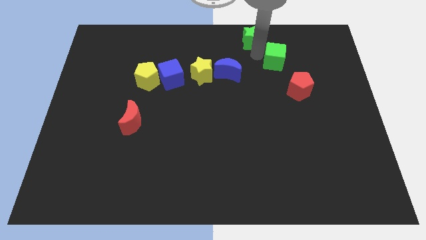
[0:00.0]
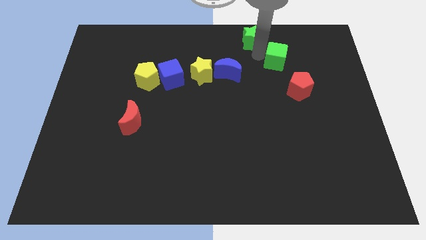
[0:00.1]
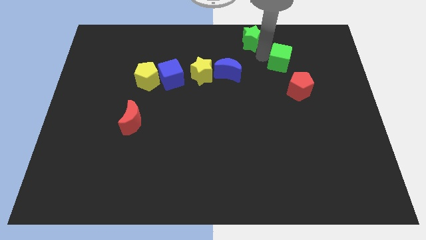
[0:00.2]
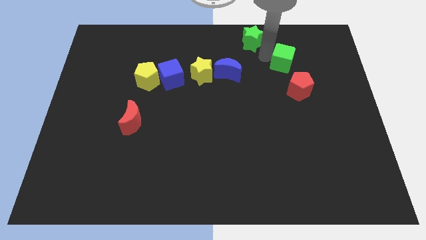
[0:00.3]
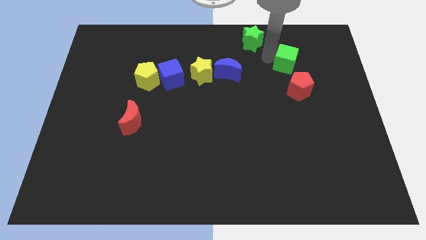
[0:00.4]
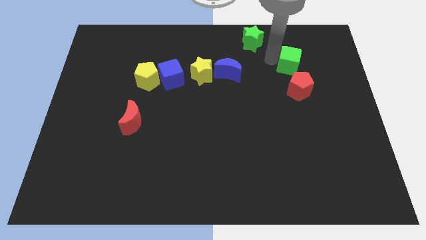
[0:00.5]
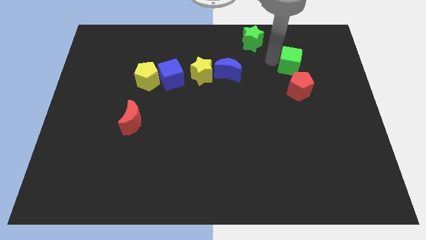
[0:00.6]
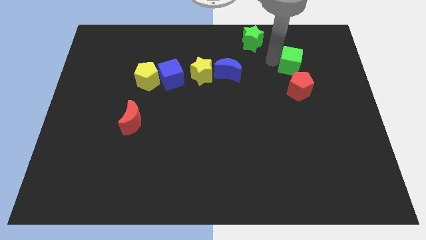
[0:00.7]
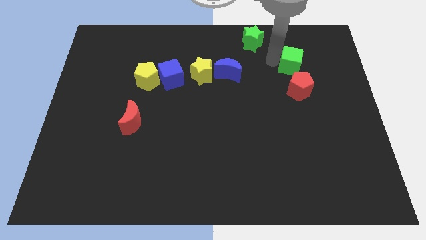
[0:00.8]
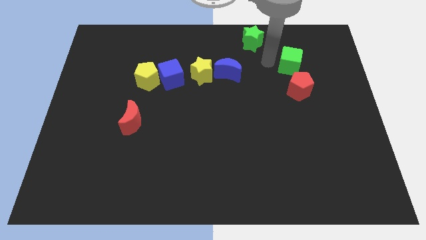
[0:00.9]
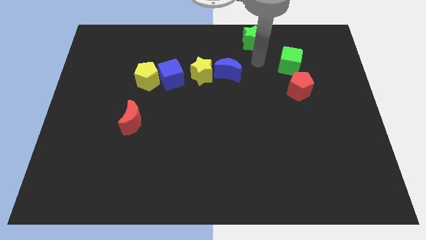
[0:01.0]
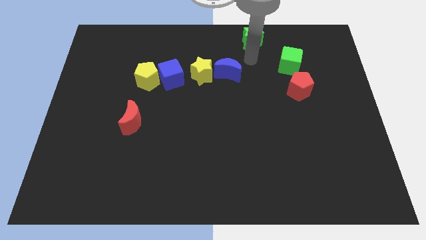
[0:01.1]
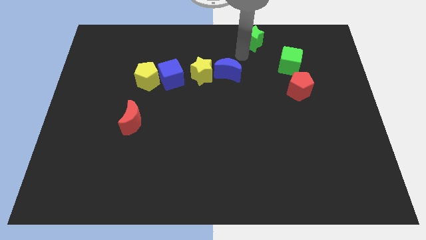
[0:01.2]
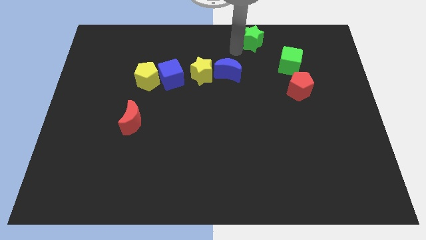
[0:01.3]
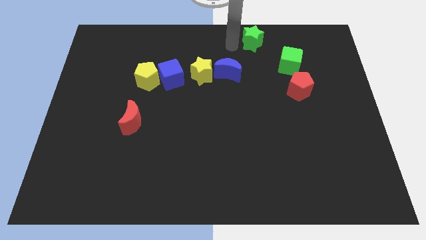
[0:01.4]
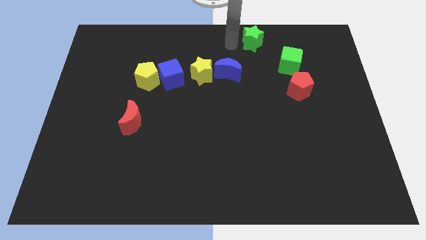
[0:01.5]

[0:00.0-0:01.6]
move the green cube diagonally above red pentagon

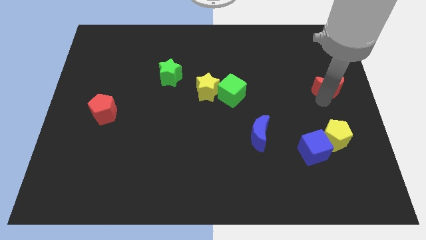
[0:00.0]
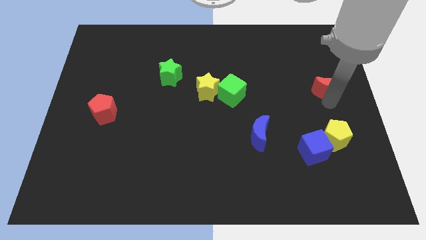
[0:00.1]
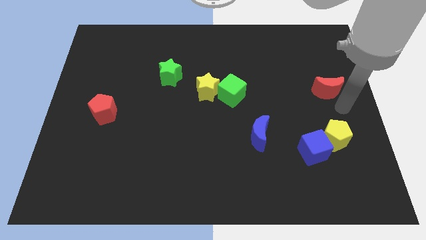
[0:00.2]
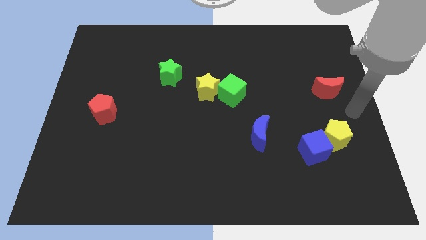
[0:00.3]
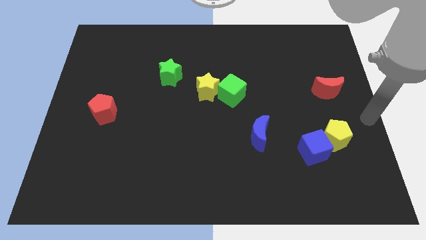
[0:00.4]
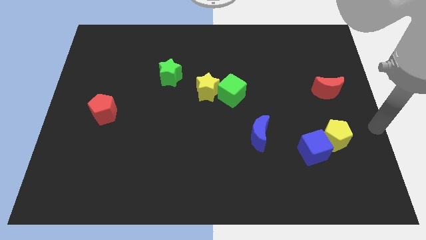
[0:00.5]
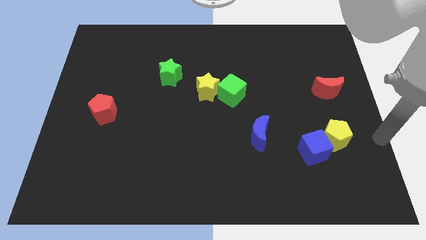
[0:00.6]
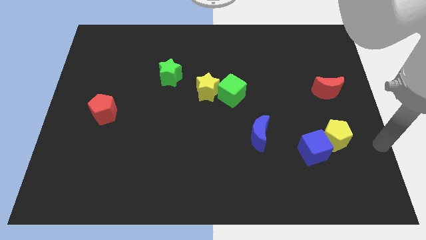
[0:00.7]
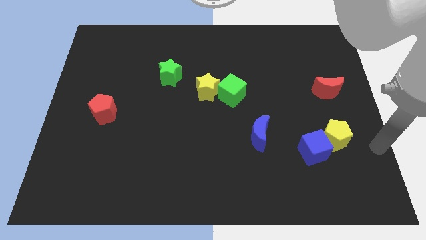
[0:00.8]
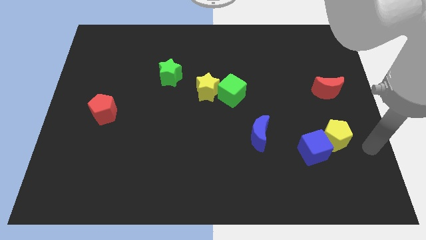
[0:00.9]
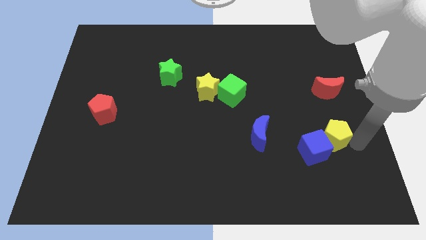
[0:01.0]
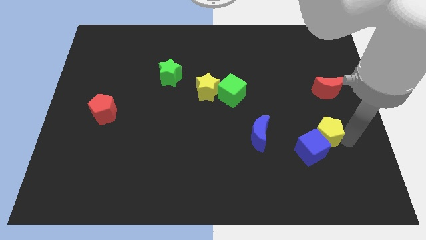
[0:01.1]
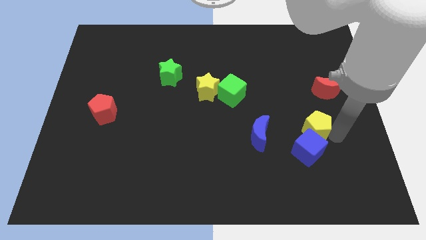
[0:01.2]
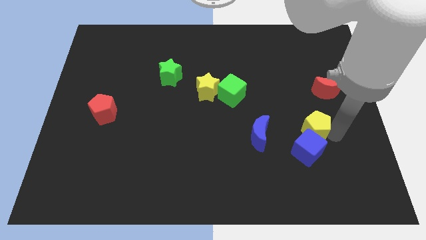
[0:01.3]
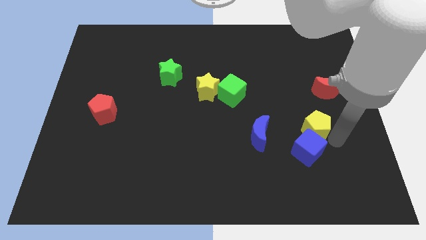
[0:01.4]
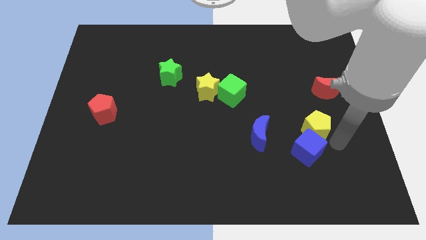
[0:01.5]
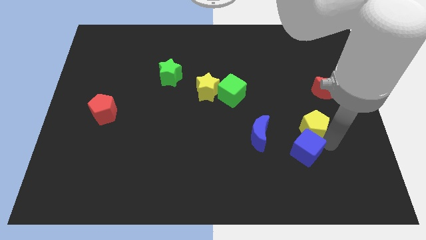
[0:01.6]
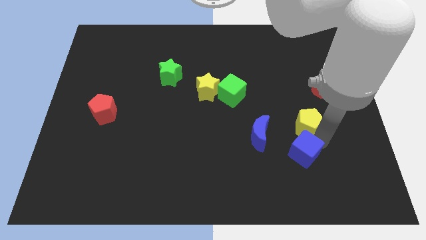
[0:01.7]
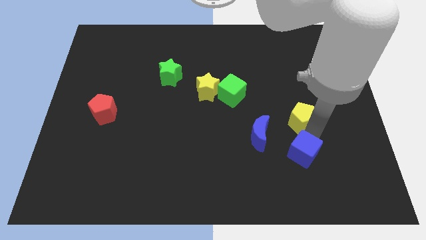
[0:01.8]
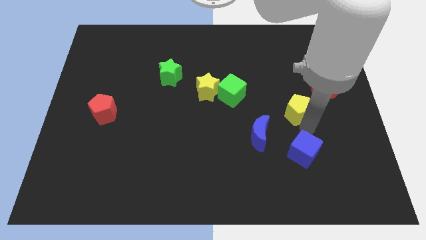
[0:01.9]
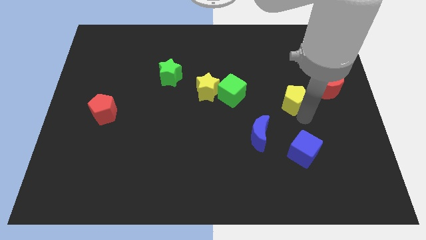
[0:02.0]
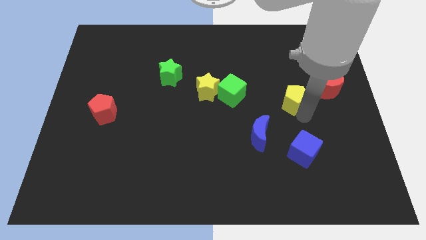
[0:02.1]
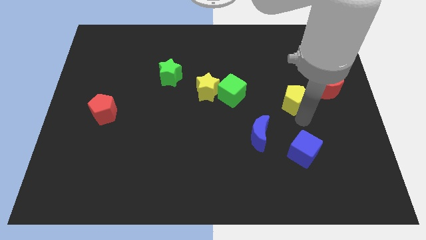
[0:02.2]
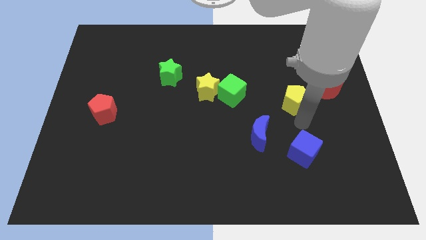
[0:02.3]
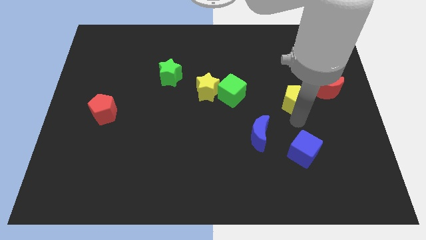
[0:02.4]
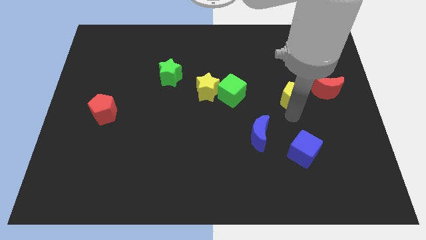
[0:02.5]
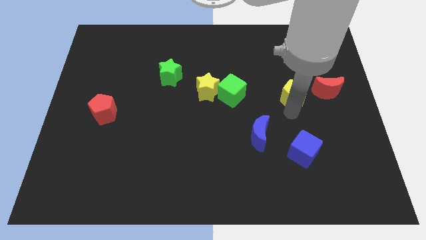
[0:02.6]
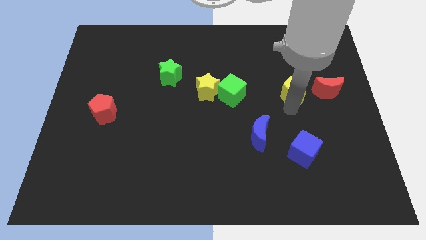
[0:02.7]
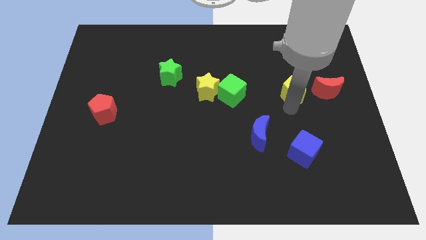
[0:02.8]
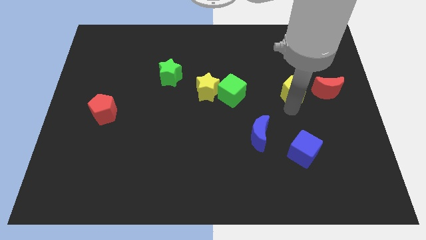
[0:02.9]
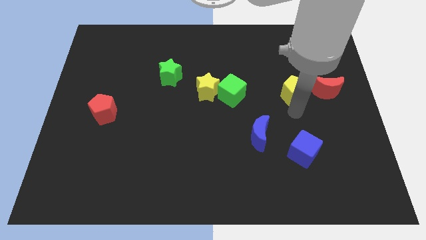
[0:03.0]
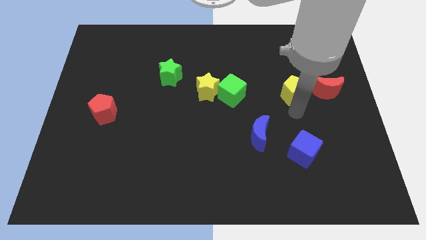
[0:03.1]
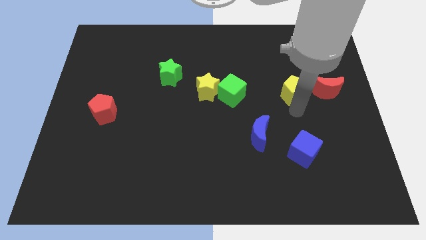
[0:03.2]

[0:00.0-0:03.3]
move the yellow pentagon to the left of the red crescent

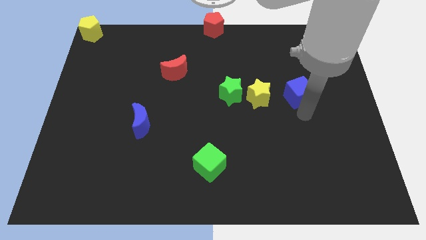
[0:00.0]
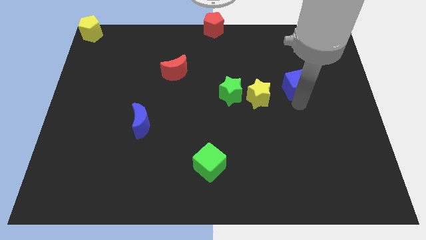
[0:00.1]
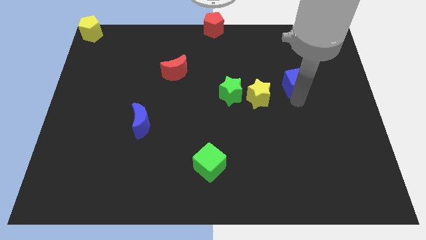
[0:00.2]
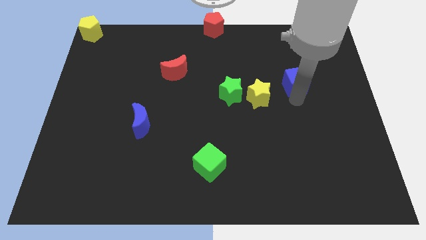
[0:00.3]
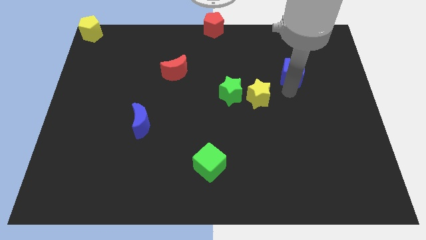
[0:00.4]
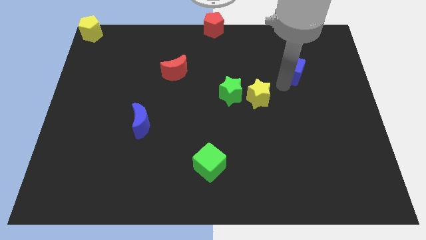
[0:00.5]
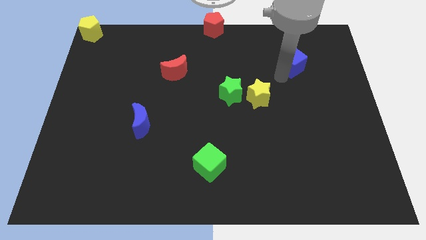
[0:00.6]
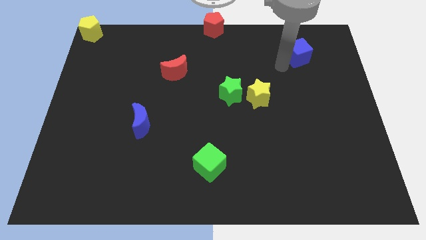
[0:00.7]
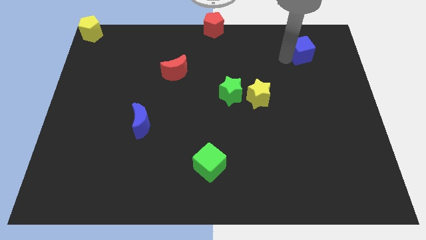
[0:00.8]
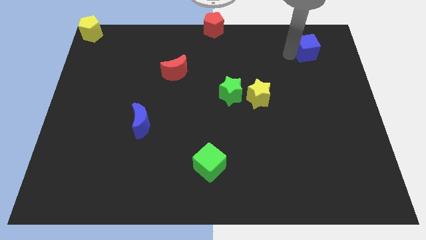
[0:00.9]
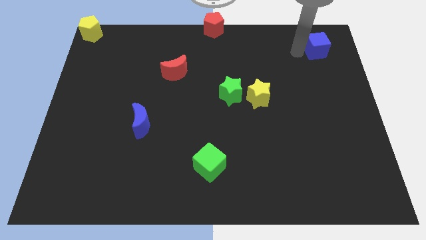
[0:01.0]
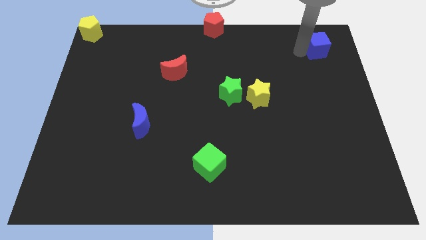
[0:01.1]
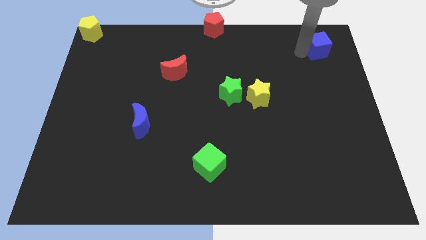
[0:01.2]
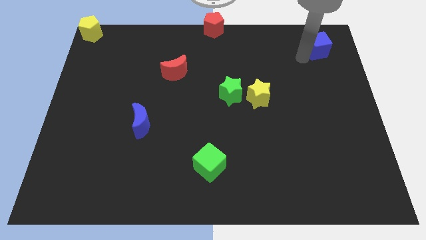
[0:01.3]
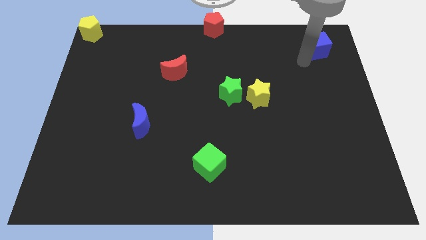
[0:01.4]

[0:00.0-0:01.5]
slide the blue cube diagonally top right to the green star

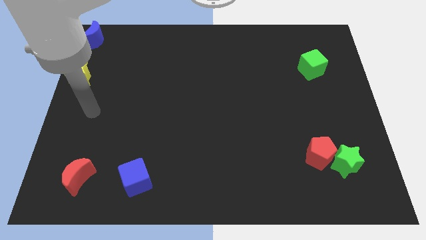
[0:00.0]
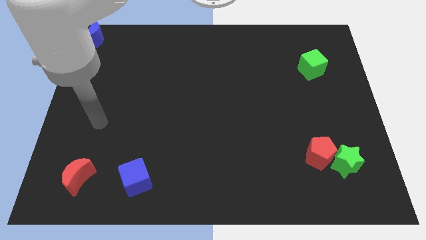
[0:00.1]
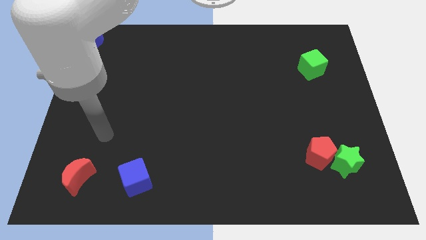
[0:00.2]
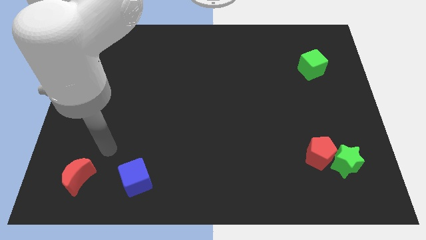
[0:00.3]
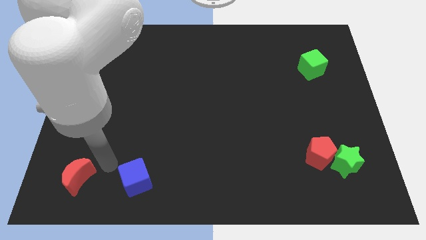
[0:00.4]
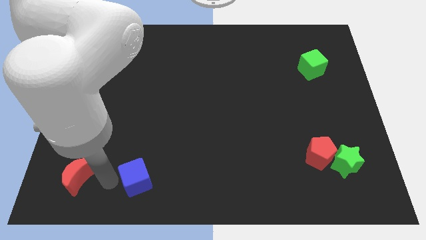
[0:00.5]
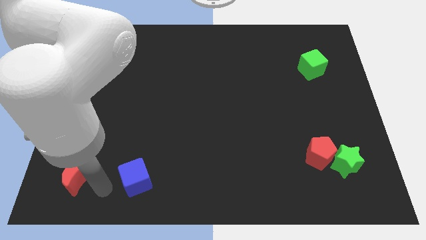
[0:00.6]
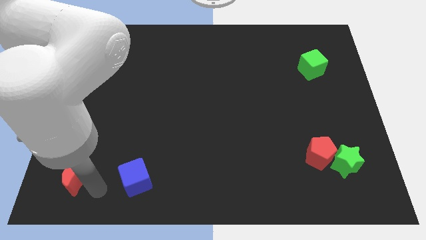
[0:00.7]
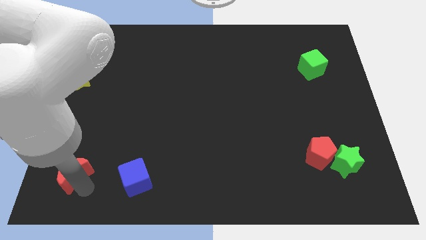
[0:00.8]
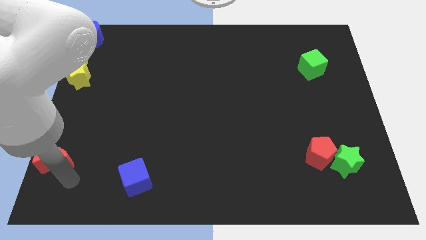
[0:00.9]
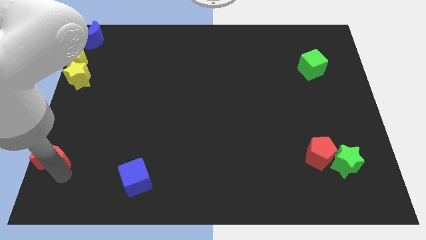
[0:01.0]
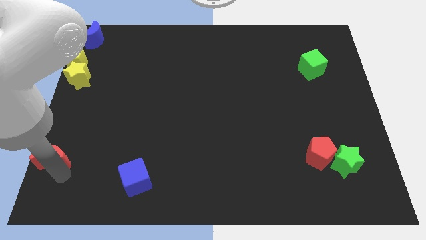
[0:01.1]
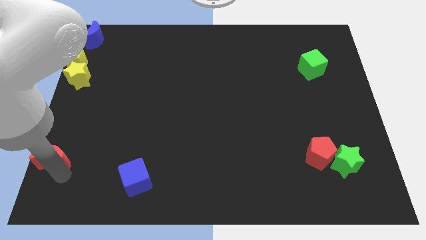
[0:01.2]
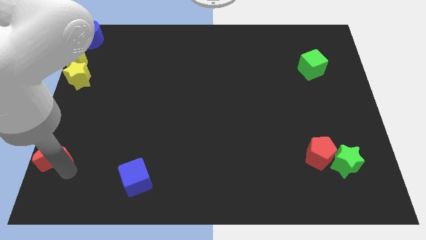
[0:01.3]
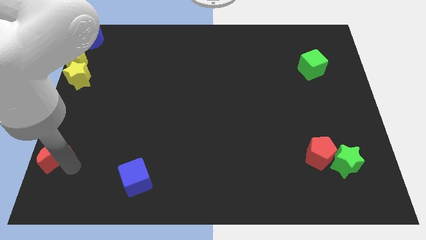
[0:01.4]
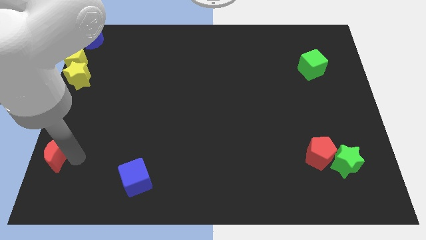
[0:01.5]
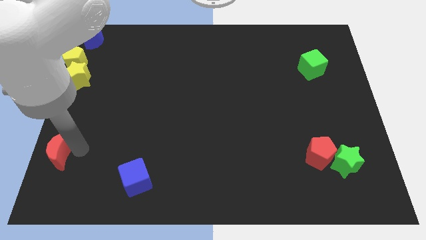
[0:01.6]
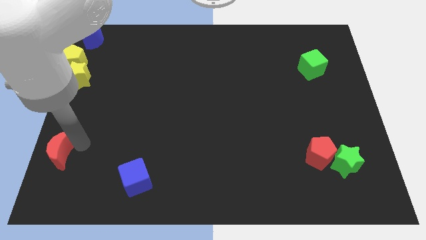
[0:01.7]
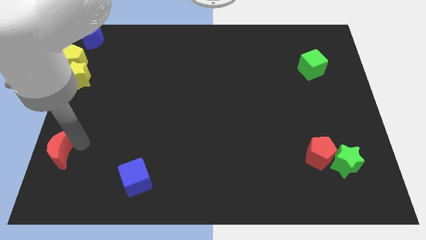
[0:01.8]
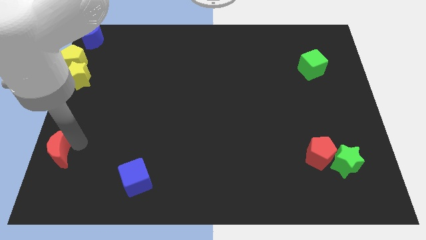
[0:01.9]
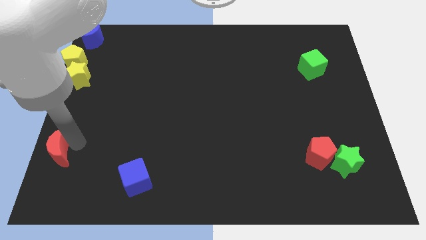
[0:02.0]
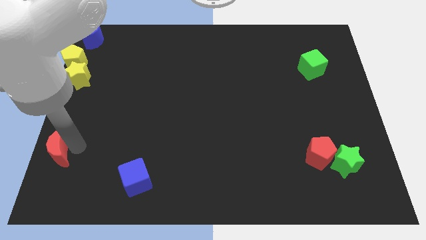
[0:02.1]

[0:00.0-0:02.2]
move the red crescent left side to the board

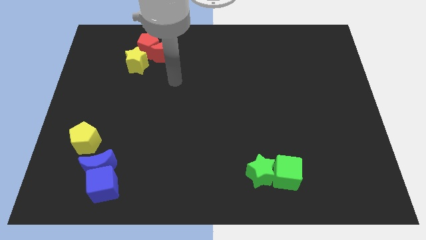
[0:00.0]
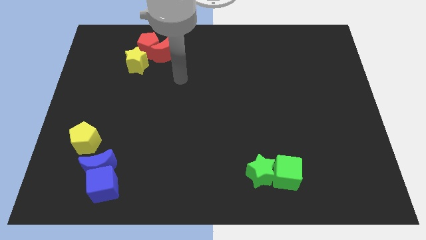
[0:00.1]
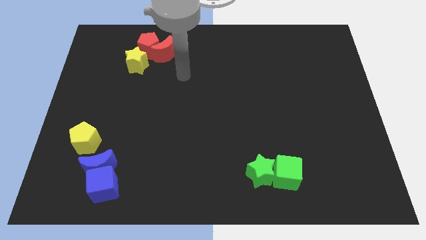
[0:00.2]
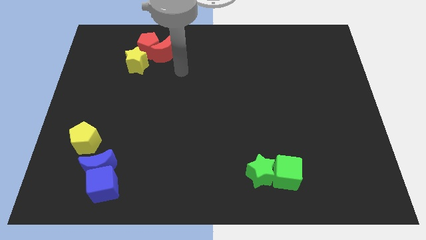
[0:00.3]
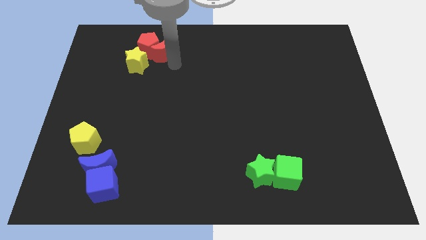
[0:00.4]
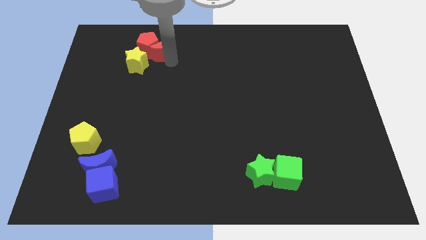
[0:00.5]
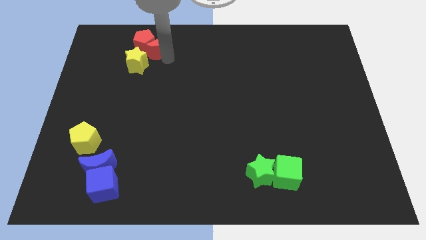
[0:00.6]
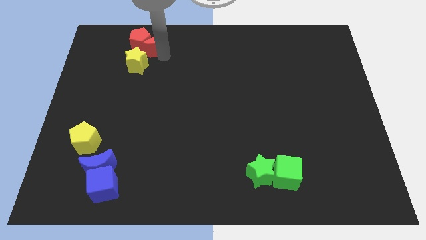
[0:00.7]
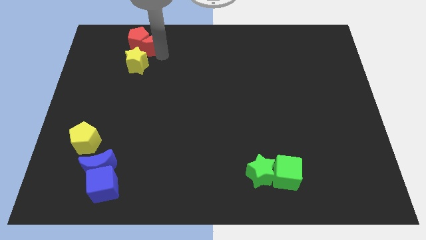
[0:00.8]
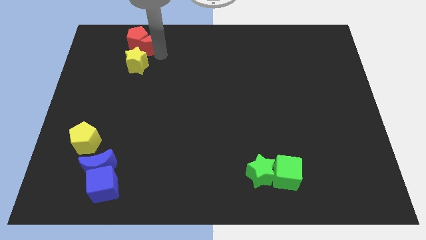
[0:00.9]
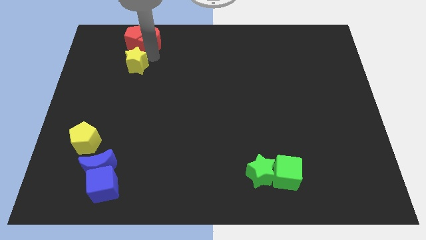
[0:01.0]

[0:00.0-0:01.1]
move the red crescent into the red pentagon
